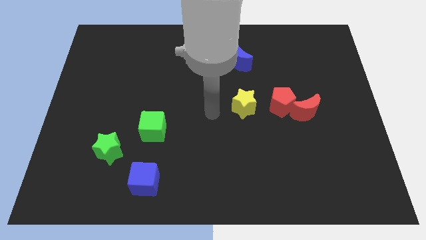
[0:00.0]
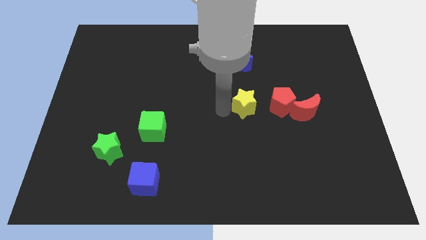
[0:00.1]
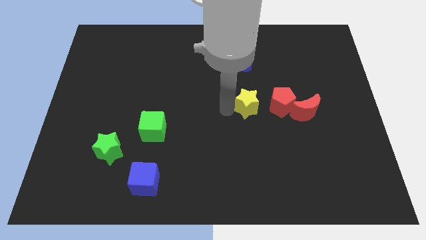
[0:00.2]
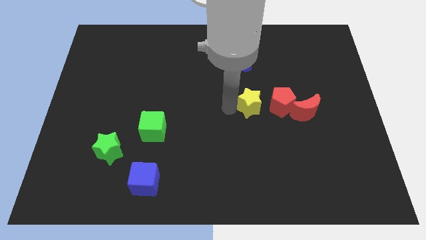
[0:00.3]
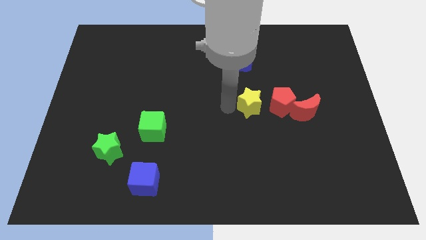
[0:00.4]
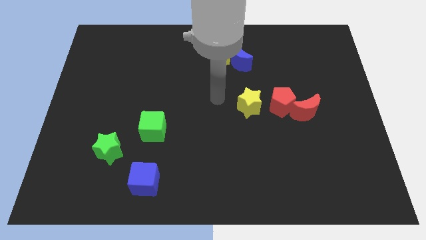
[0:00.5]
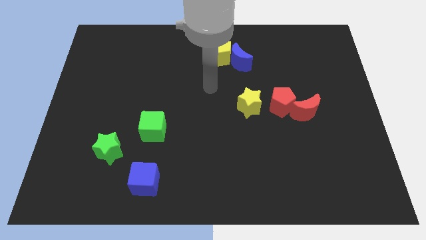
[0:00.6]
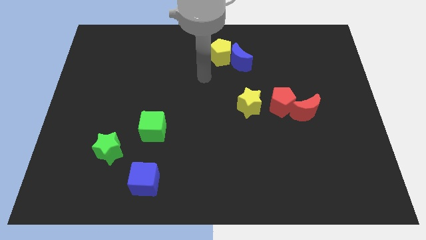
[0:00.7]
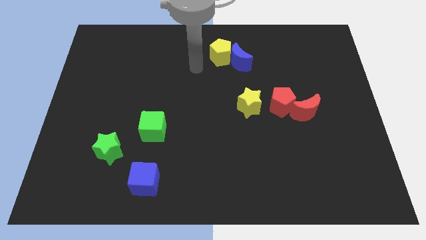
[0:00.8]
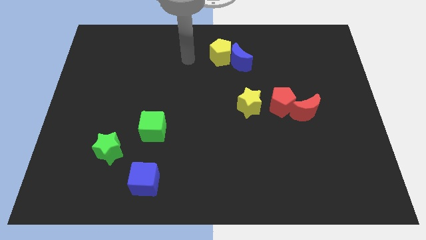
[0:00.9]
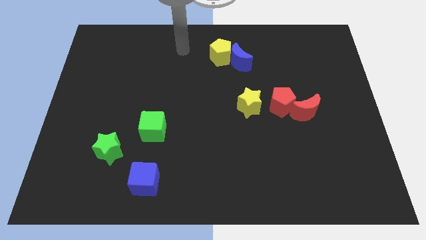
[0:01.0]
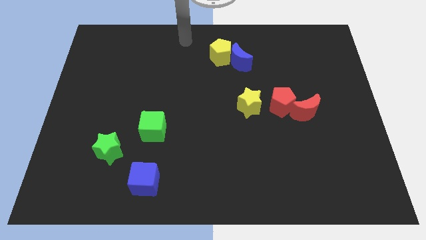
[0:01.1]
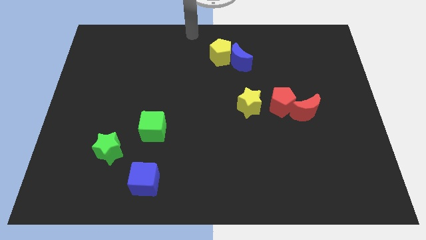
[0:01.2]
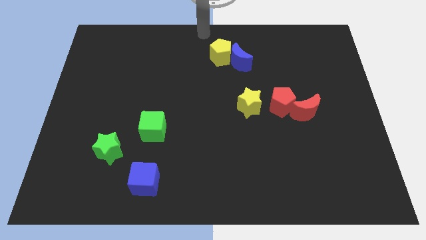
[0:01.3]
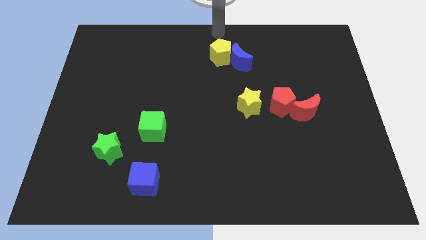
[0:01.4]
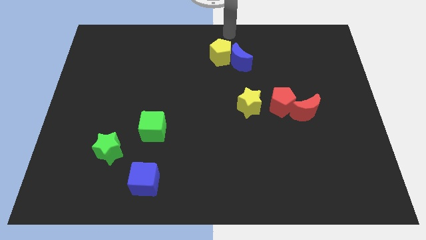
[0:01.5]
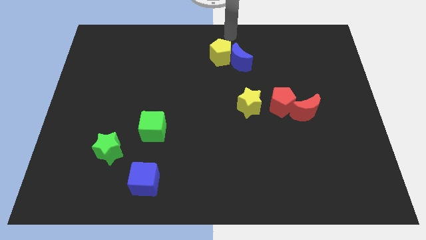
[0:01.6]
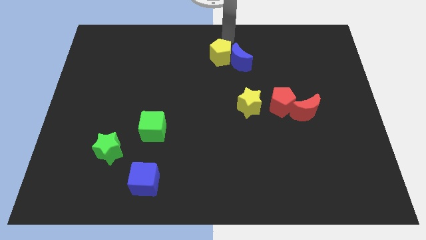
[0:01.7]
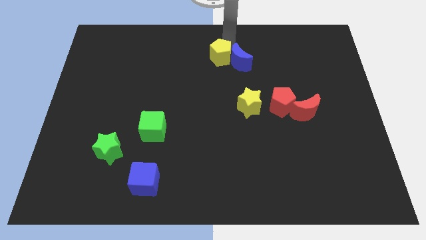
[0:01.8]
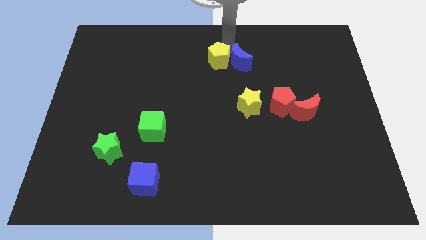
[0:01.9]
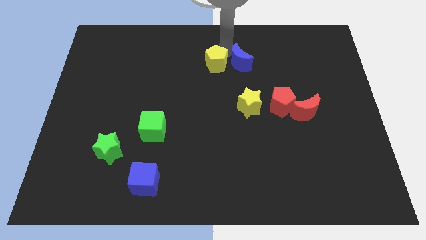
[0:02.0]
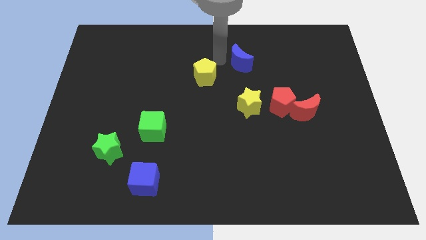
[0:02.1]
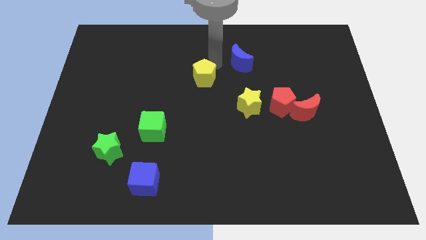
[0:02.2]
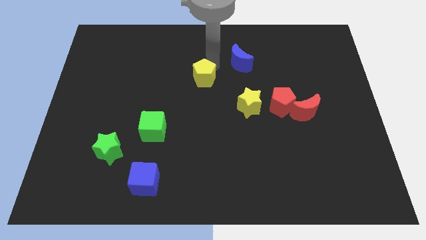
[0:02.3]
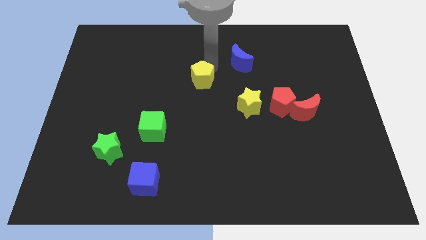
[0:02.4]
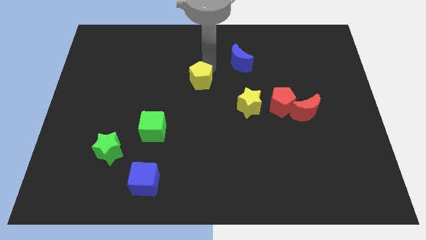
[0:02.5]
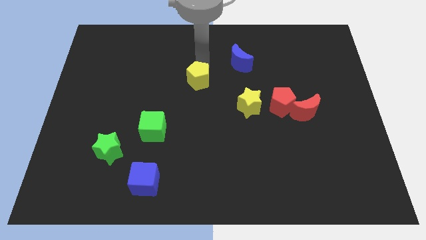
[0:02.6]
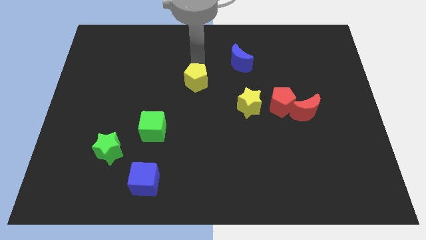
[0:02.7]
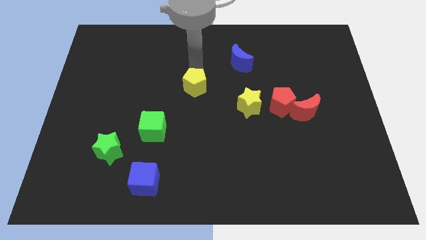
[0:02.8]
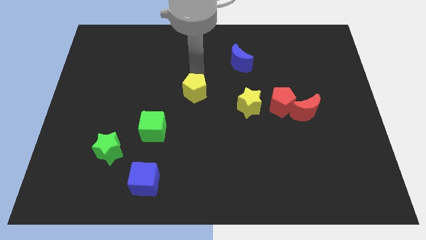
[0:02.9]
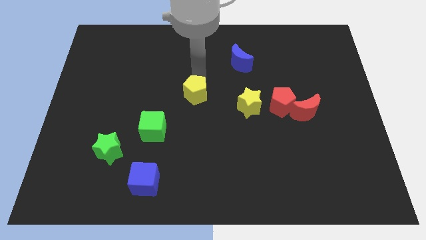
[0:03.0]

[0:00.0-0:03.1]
separate yellow pentagon from the blue crescent

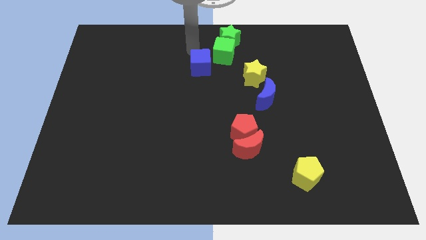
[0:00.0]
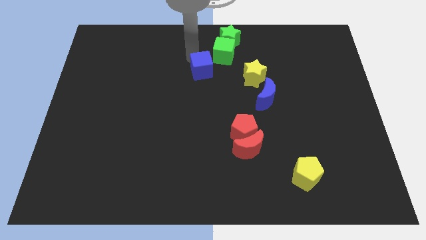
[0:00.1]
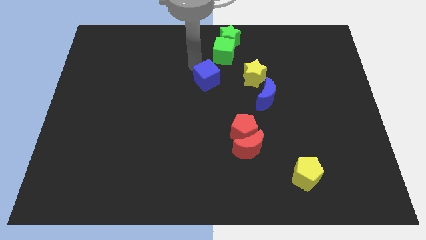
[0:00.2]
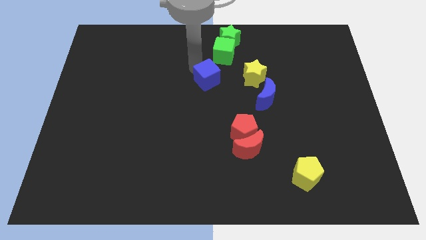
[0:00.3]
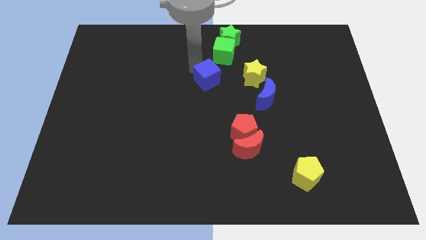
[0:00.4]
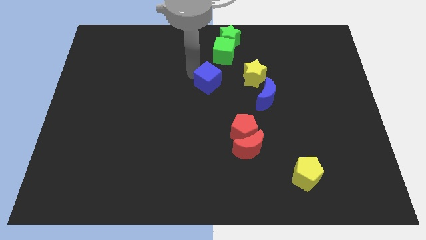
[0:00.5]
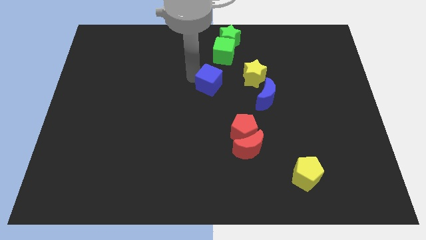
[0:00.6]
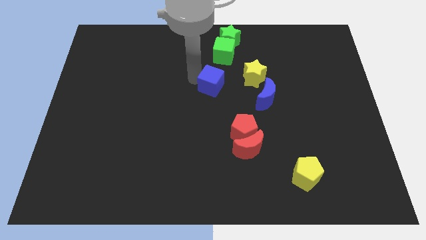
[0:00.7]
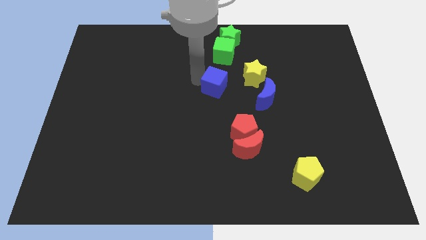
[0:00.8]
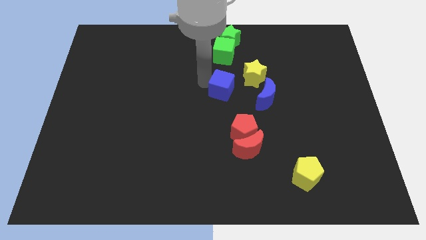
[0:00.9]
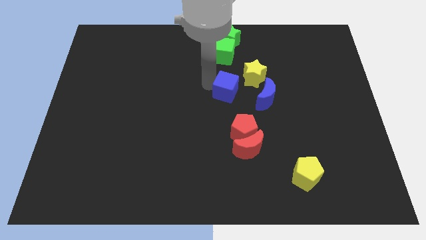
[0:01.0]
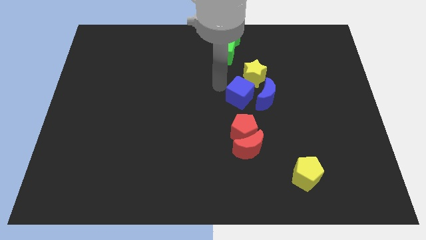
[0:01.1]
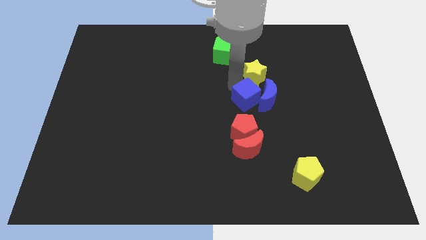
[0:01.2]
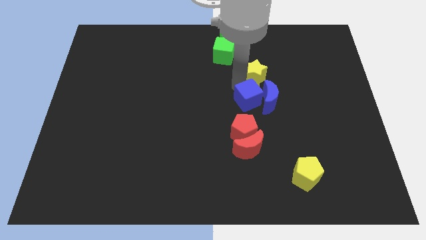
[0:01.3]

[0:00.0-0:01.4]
push the blue cube into the blue moon

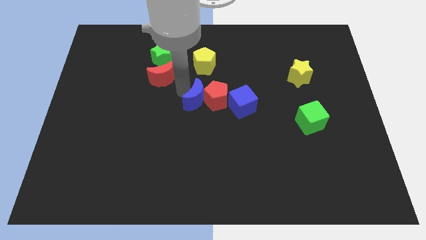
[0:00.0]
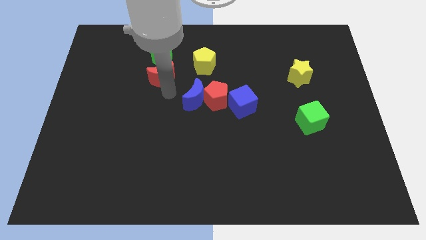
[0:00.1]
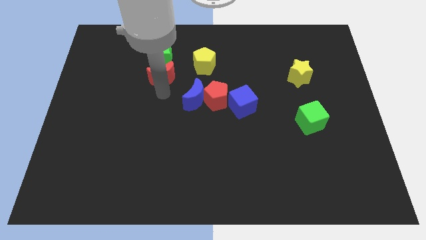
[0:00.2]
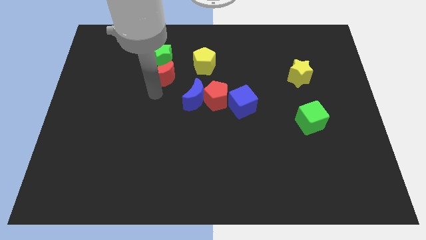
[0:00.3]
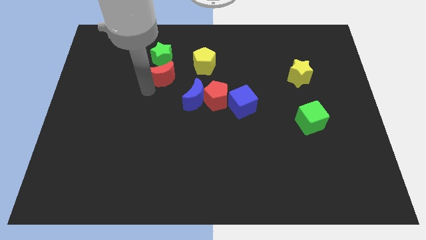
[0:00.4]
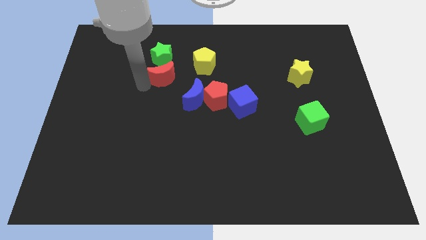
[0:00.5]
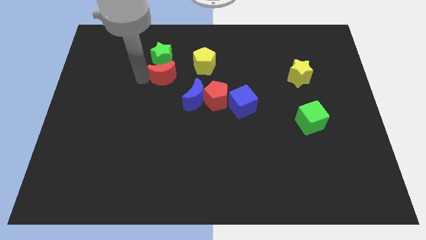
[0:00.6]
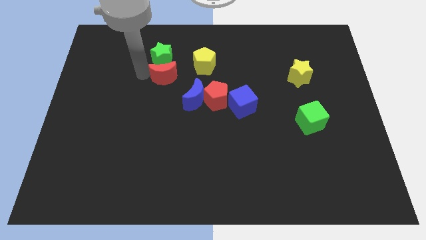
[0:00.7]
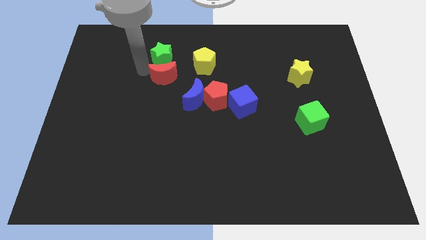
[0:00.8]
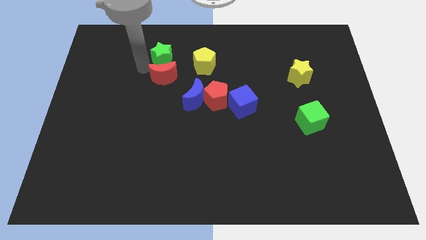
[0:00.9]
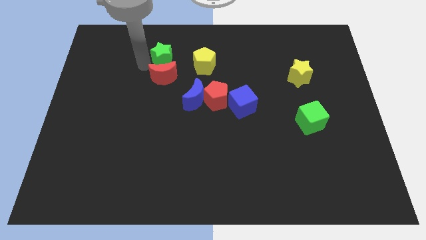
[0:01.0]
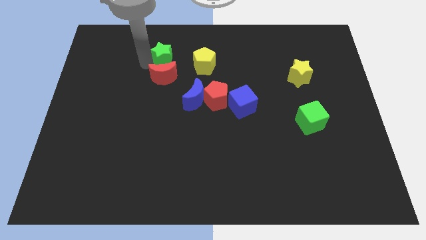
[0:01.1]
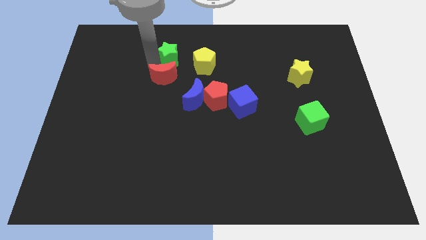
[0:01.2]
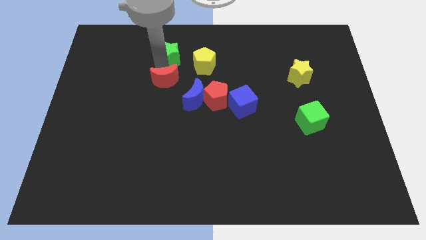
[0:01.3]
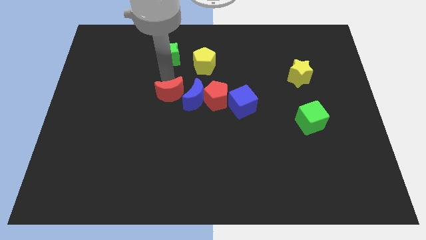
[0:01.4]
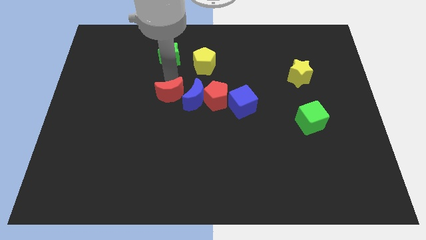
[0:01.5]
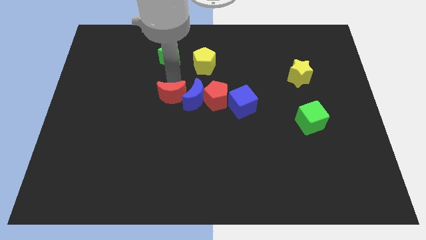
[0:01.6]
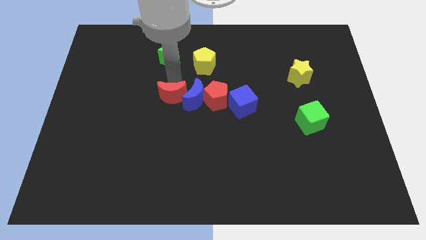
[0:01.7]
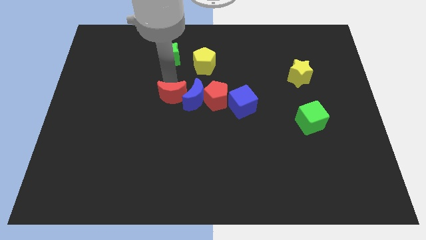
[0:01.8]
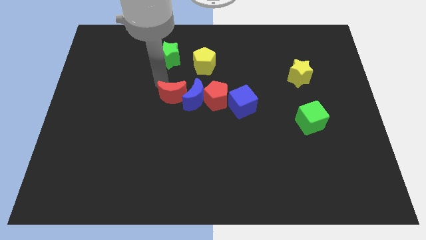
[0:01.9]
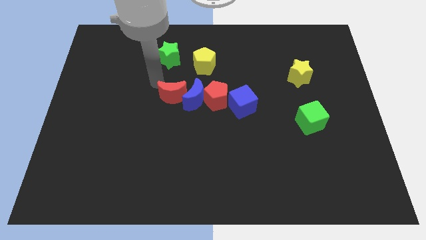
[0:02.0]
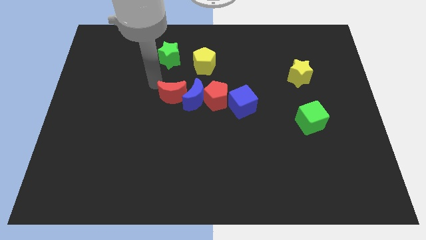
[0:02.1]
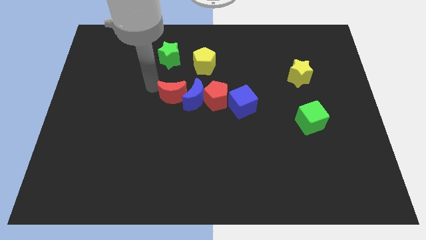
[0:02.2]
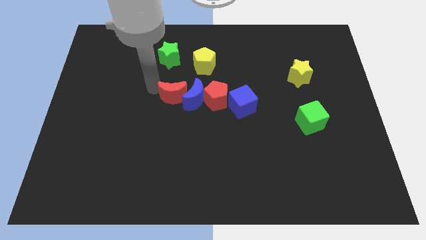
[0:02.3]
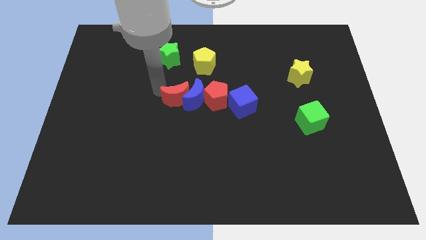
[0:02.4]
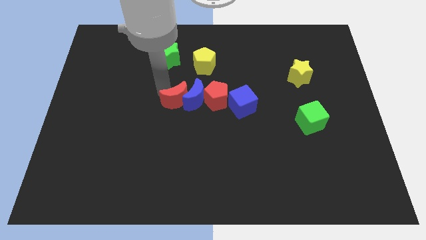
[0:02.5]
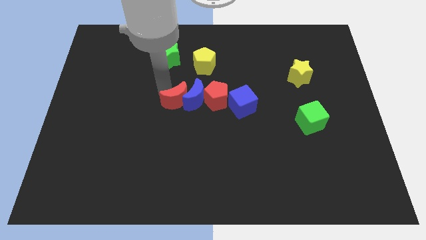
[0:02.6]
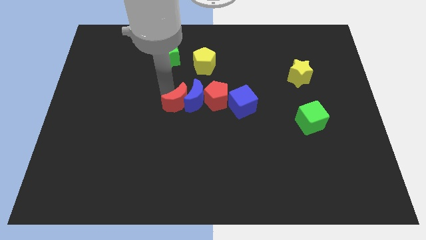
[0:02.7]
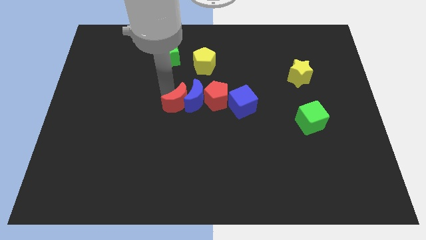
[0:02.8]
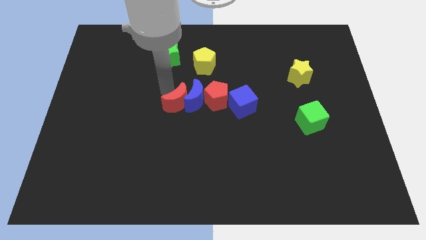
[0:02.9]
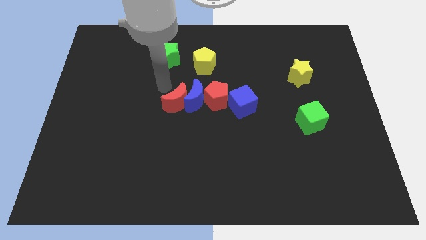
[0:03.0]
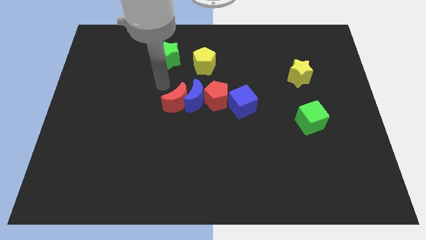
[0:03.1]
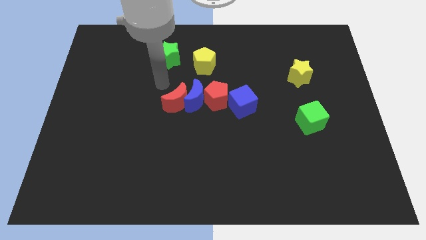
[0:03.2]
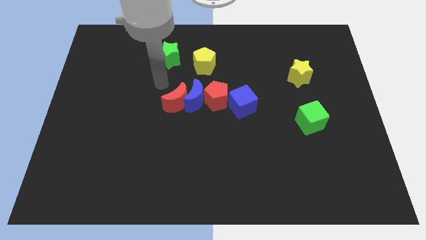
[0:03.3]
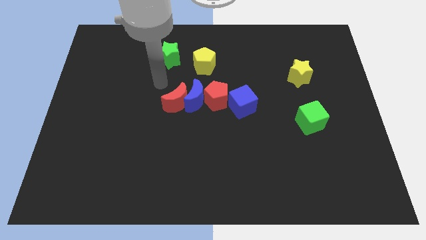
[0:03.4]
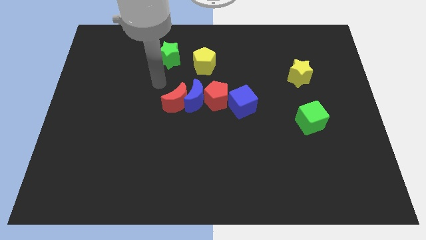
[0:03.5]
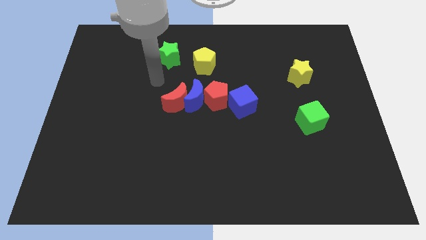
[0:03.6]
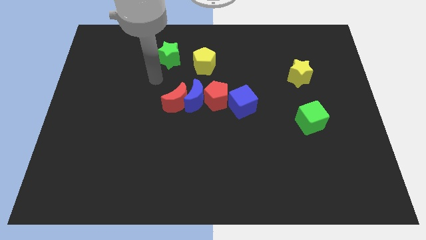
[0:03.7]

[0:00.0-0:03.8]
place the red moon to the left of blue moon

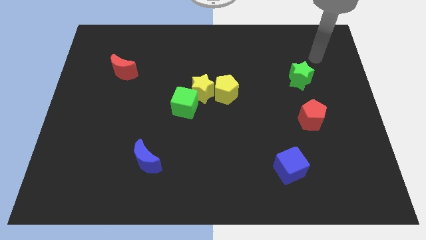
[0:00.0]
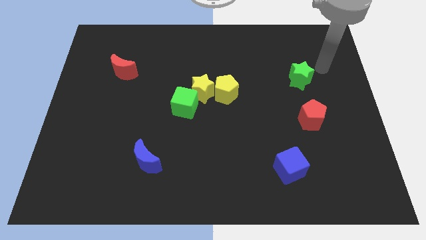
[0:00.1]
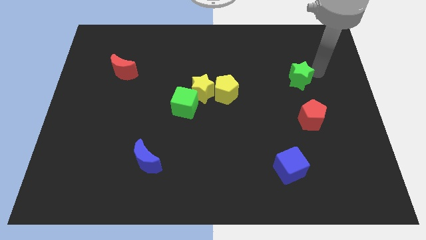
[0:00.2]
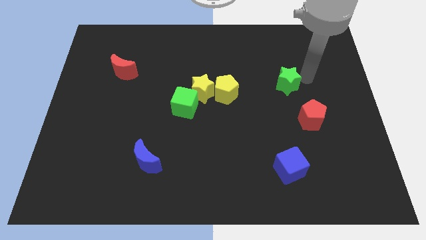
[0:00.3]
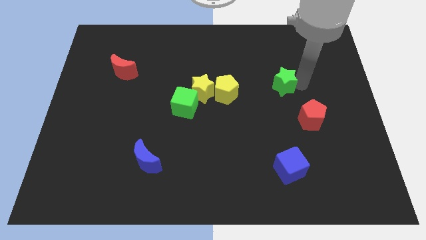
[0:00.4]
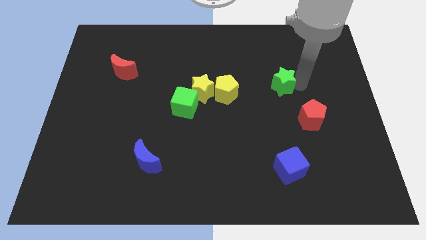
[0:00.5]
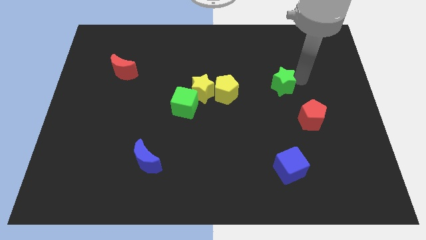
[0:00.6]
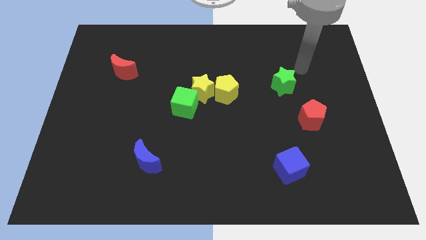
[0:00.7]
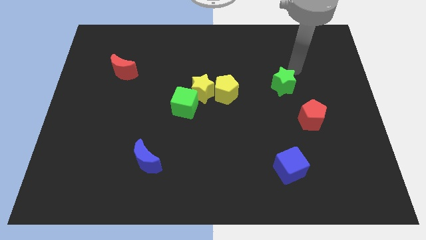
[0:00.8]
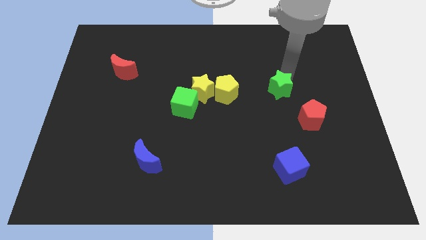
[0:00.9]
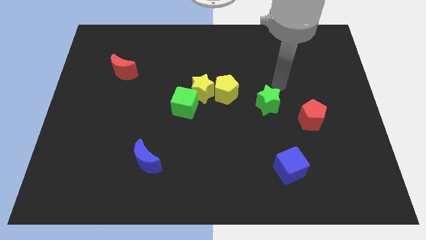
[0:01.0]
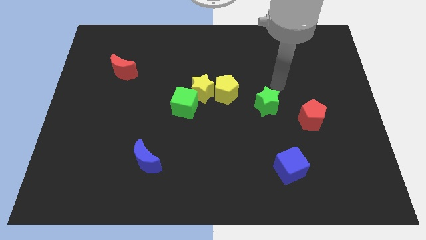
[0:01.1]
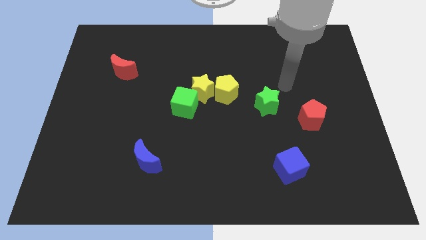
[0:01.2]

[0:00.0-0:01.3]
move the green star in between yellow and red pentagon
